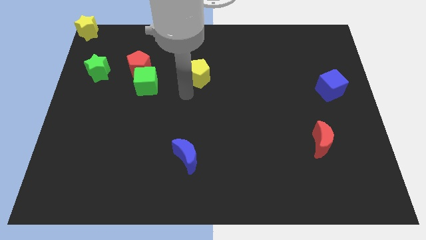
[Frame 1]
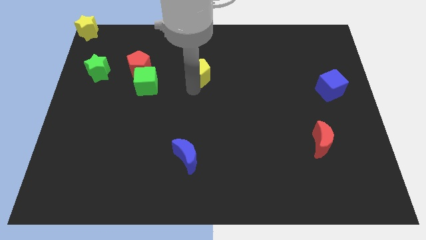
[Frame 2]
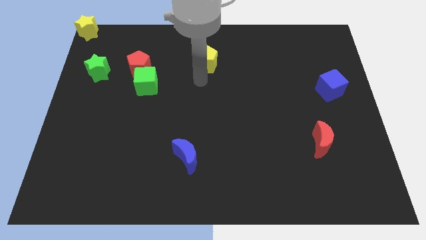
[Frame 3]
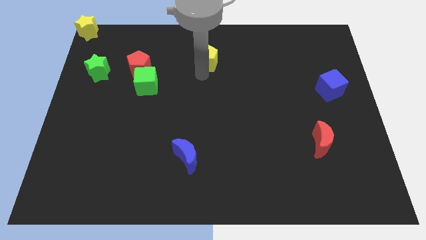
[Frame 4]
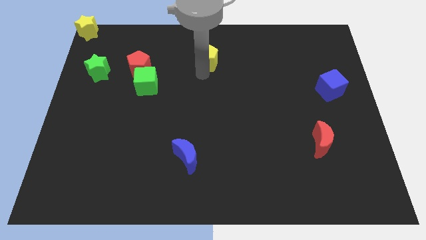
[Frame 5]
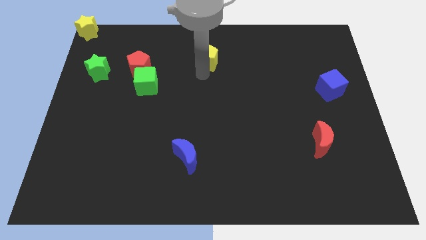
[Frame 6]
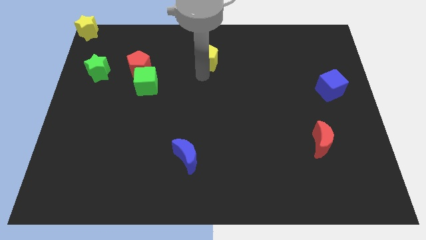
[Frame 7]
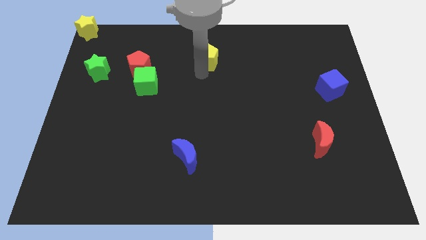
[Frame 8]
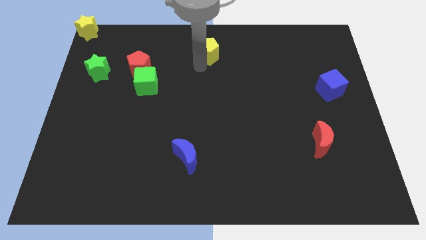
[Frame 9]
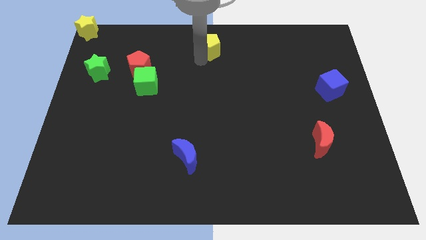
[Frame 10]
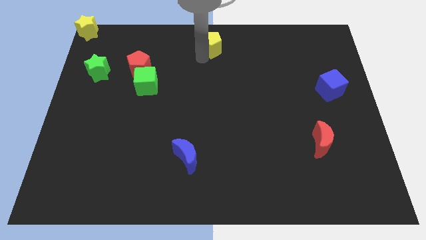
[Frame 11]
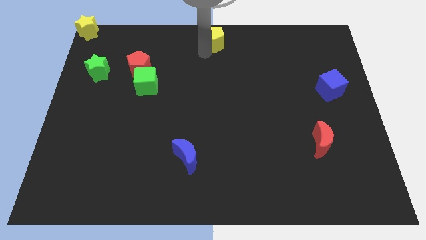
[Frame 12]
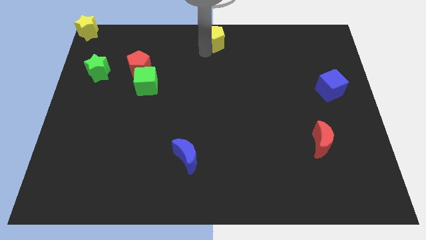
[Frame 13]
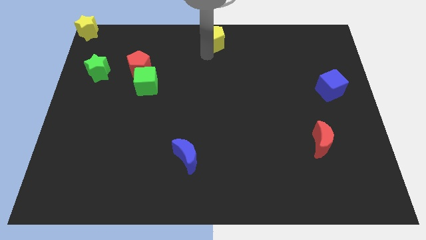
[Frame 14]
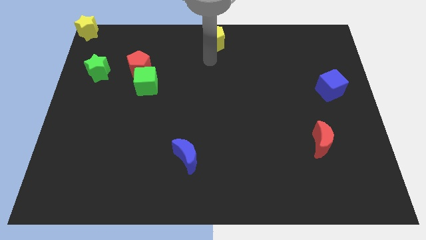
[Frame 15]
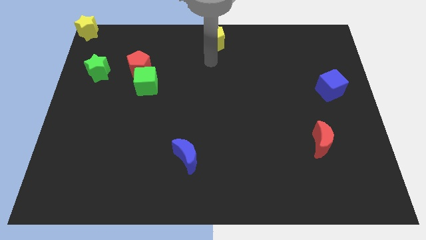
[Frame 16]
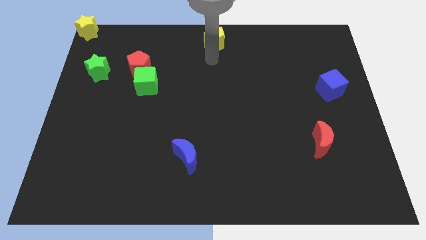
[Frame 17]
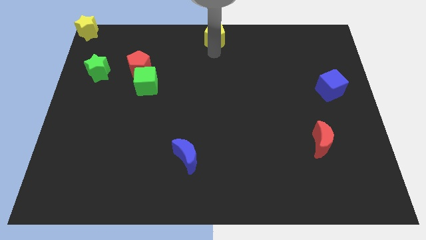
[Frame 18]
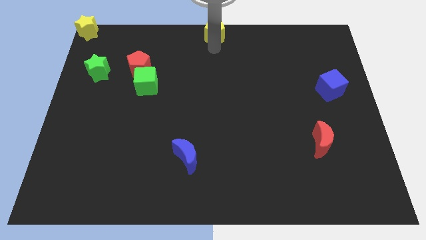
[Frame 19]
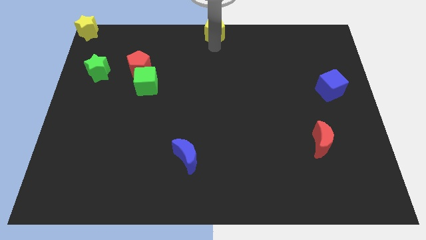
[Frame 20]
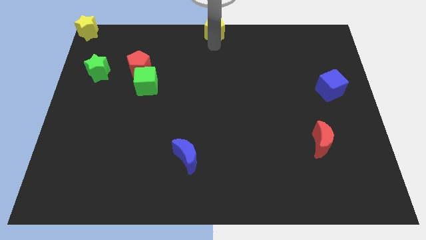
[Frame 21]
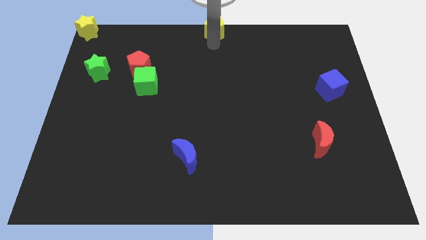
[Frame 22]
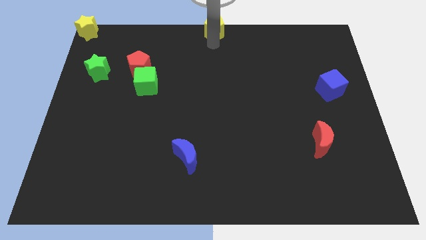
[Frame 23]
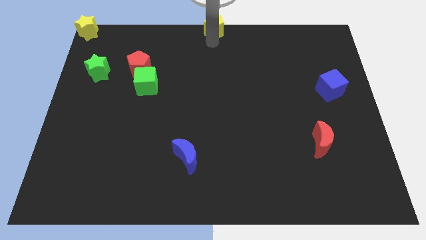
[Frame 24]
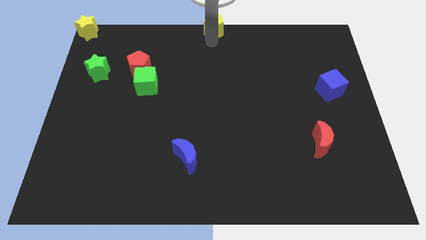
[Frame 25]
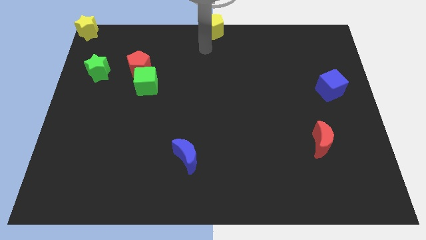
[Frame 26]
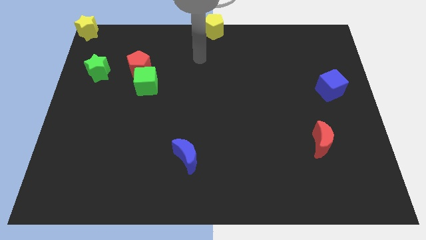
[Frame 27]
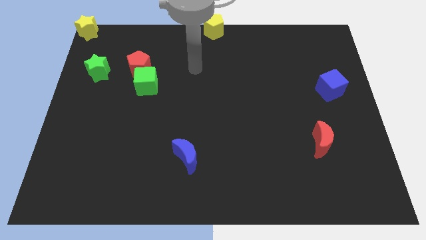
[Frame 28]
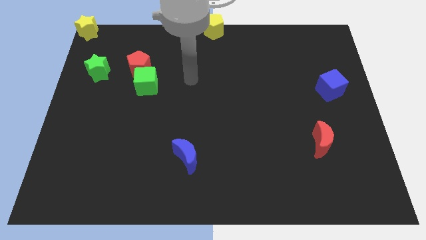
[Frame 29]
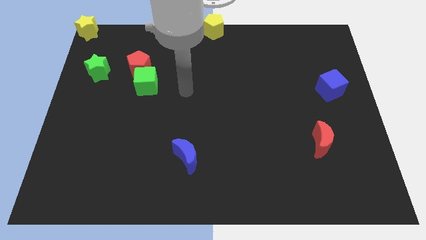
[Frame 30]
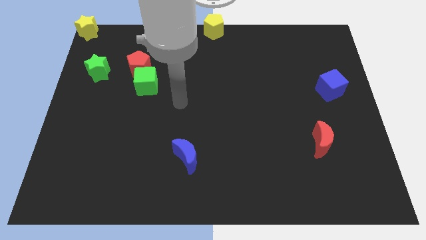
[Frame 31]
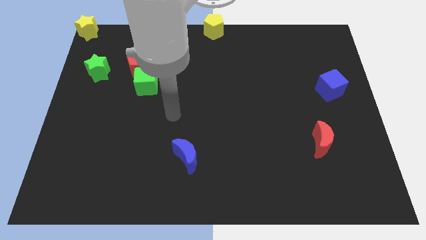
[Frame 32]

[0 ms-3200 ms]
place the yellow pentagon towards the top center of the board

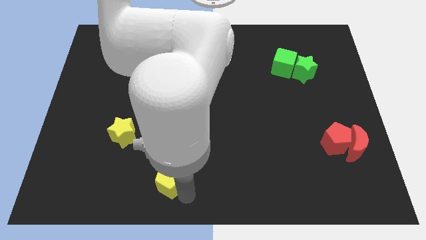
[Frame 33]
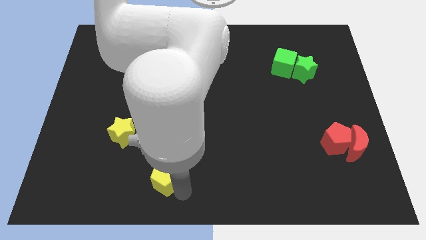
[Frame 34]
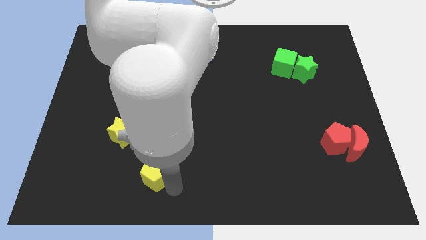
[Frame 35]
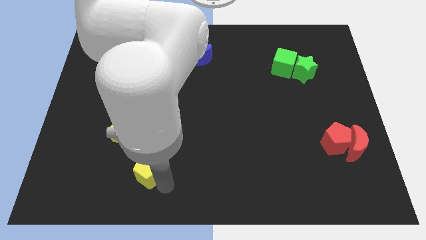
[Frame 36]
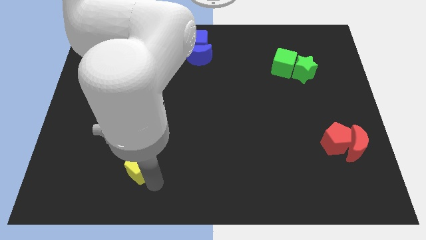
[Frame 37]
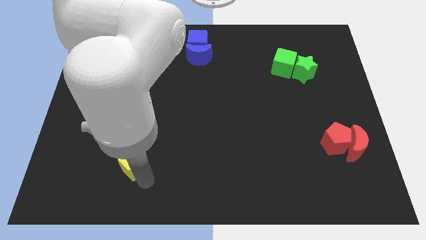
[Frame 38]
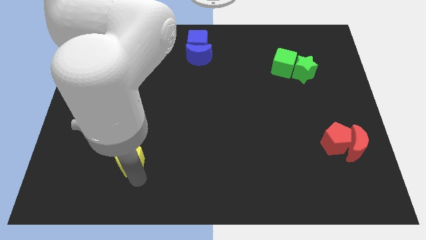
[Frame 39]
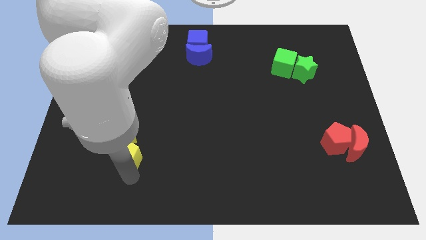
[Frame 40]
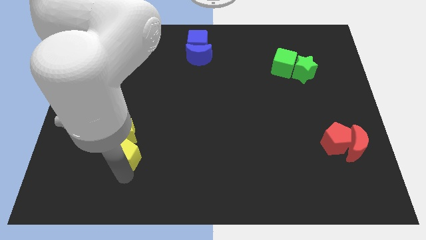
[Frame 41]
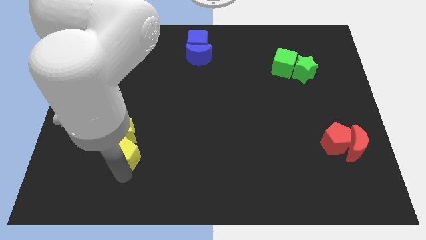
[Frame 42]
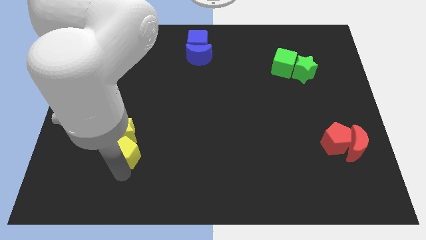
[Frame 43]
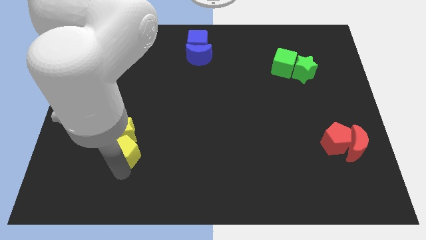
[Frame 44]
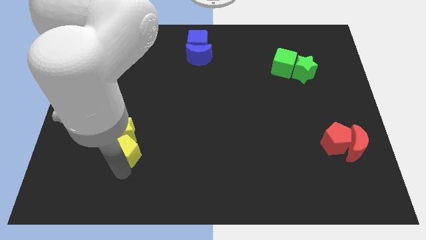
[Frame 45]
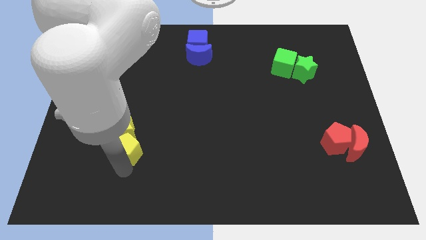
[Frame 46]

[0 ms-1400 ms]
move yellow pentagon into the yellow star

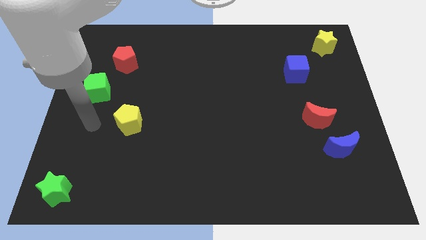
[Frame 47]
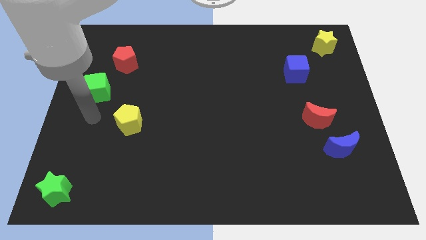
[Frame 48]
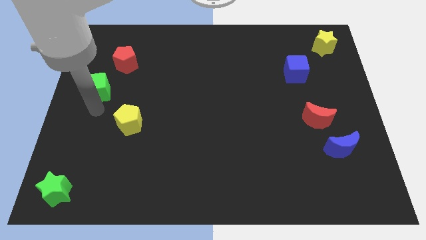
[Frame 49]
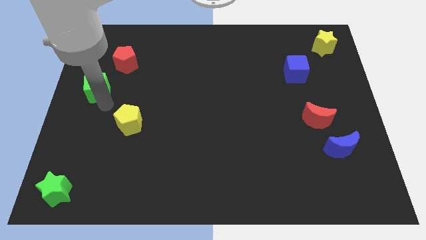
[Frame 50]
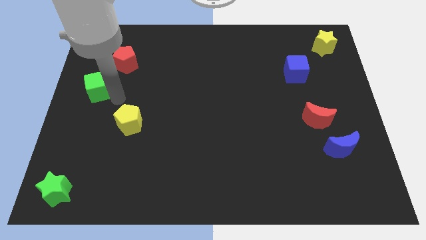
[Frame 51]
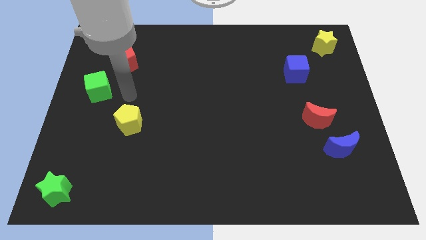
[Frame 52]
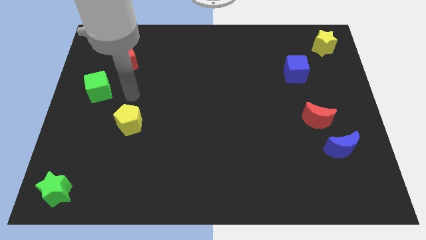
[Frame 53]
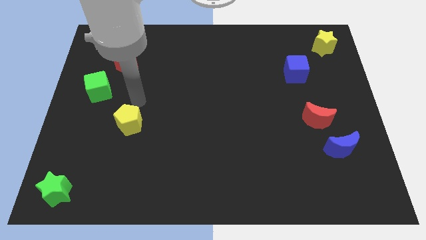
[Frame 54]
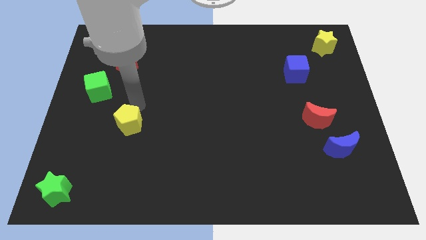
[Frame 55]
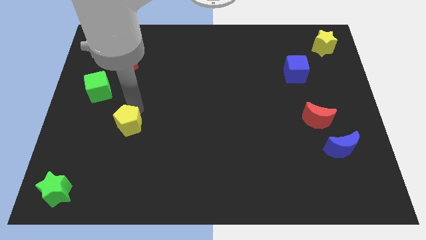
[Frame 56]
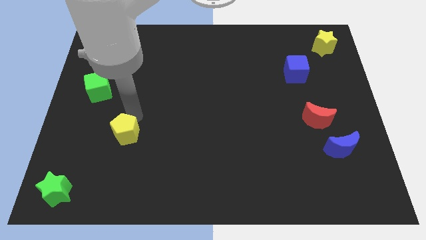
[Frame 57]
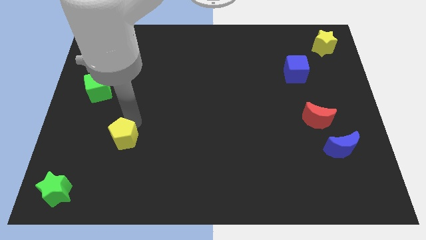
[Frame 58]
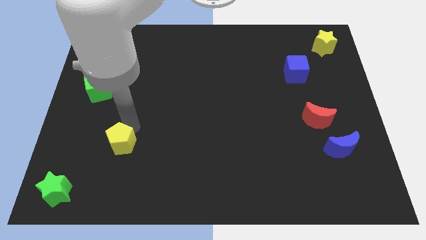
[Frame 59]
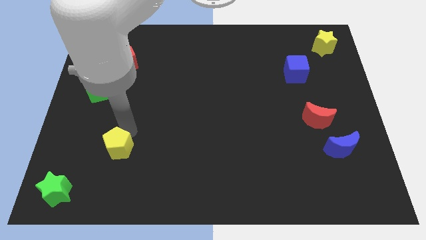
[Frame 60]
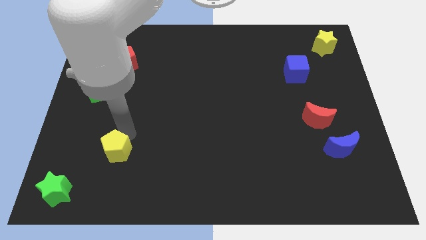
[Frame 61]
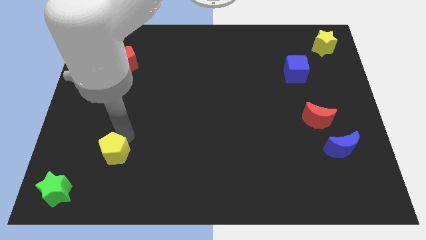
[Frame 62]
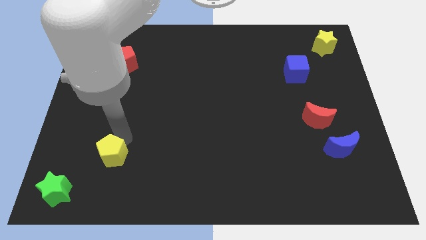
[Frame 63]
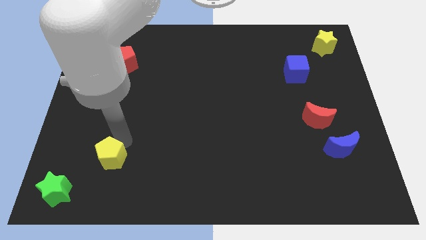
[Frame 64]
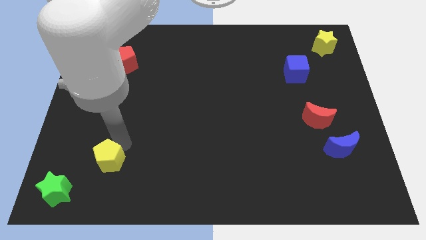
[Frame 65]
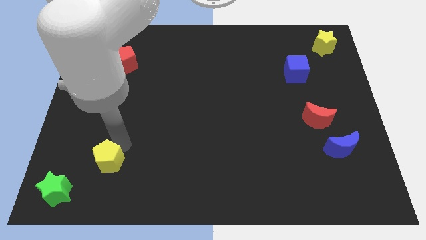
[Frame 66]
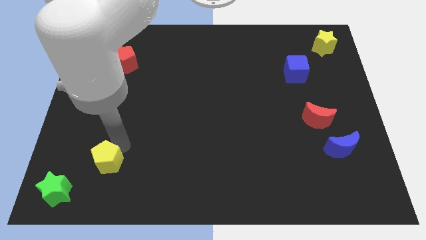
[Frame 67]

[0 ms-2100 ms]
push the yellow pentagon towards the green star

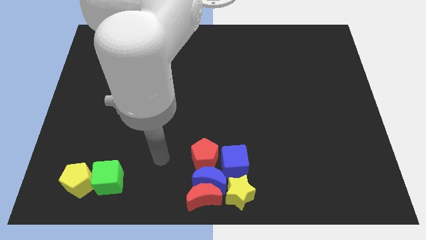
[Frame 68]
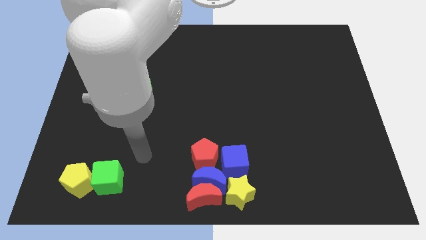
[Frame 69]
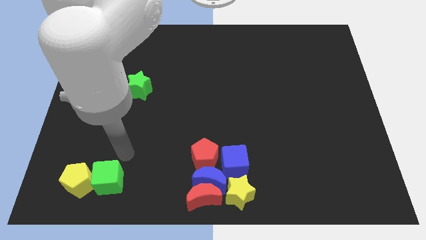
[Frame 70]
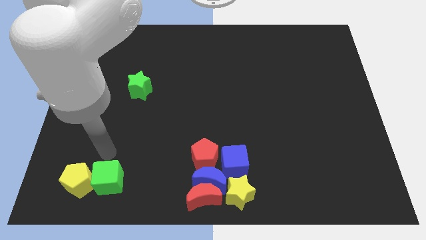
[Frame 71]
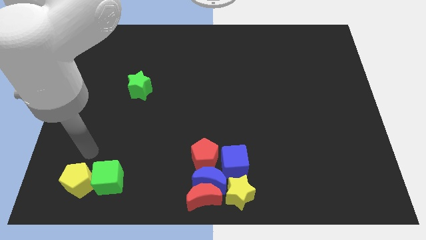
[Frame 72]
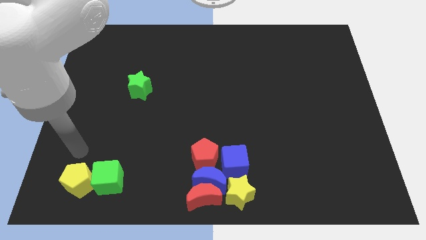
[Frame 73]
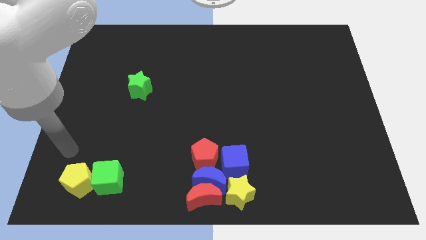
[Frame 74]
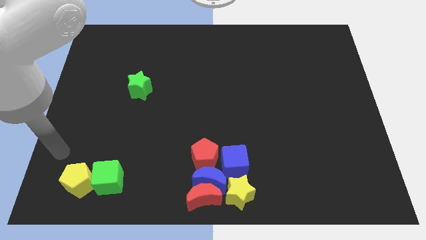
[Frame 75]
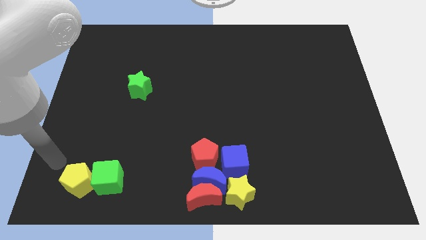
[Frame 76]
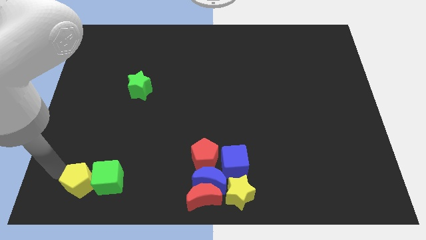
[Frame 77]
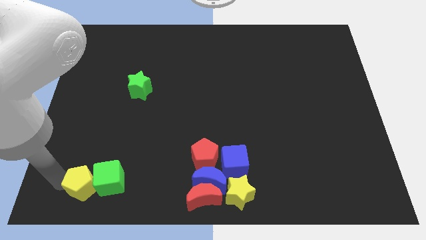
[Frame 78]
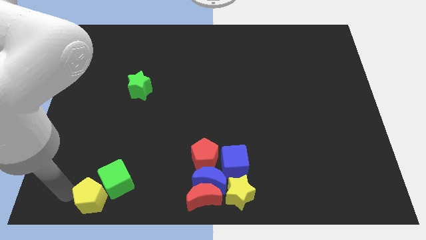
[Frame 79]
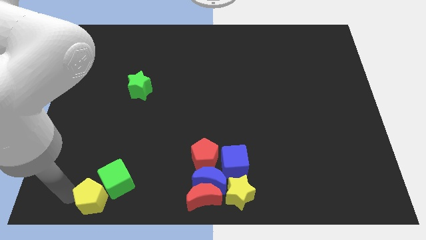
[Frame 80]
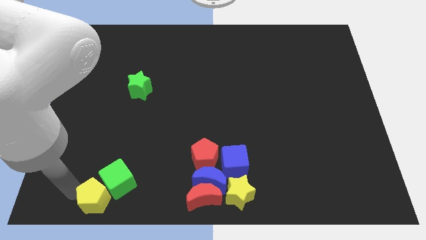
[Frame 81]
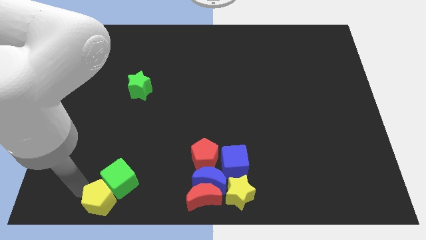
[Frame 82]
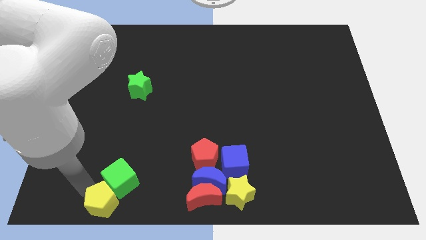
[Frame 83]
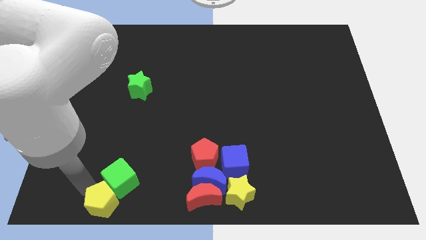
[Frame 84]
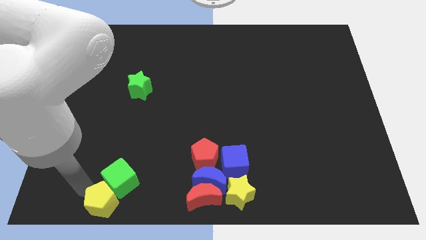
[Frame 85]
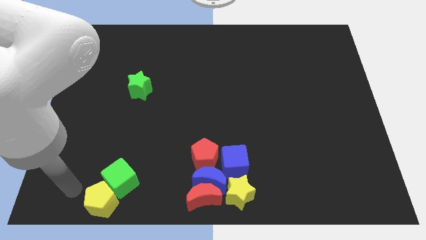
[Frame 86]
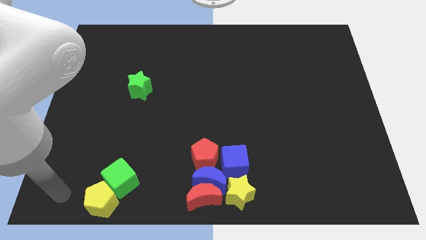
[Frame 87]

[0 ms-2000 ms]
move the yellow pentagon towards the right bottom center

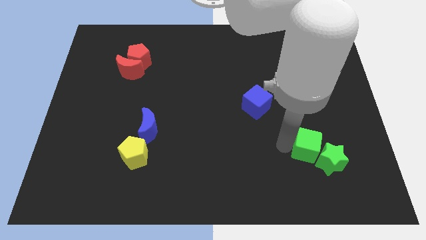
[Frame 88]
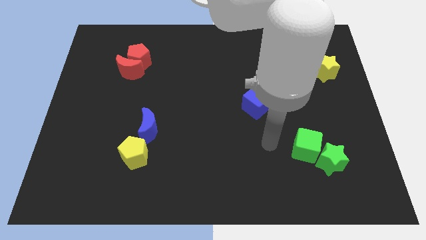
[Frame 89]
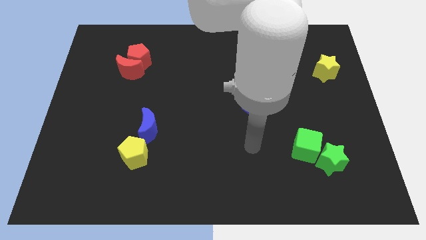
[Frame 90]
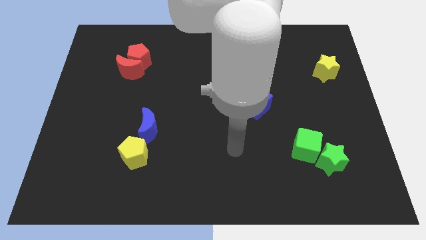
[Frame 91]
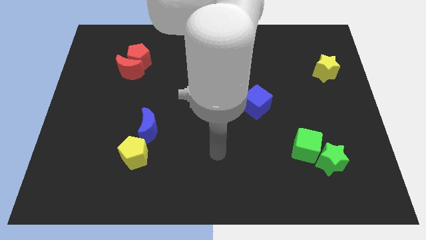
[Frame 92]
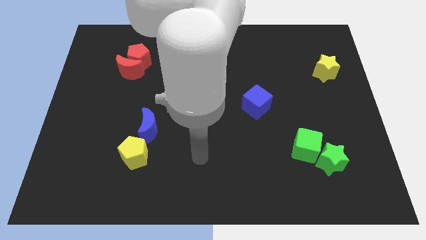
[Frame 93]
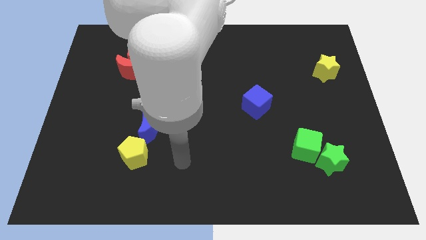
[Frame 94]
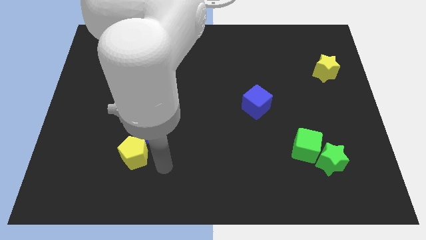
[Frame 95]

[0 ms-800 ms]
move the arm away from green blocks
